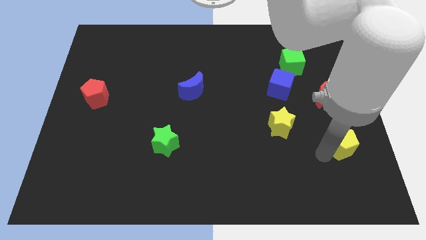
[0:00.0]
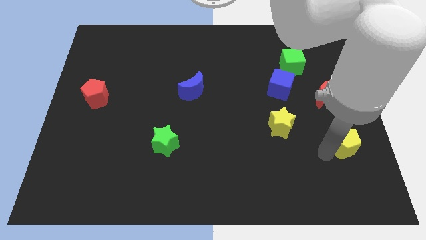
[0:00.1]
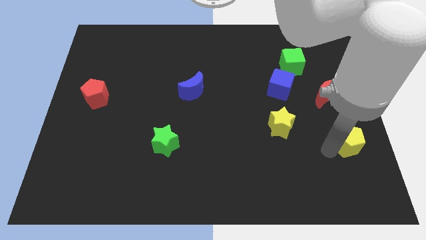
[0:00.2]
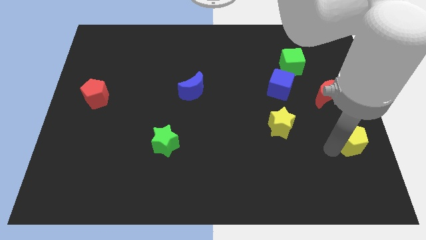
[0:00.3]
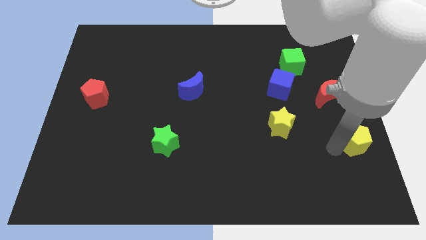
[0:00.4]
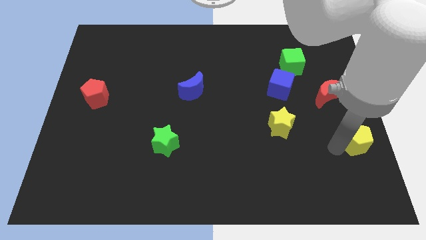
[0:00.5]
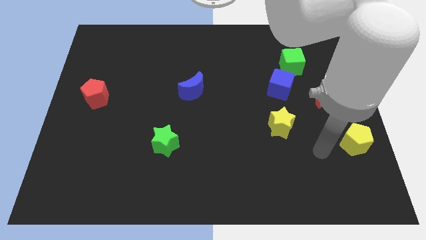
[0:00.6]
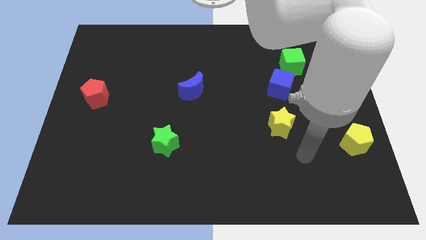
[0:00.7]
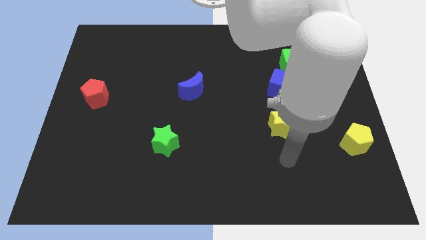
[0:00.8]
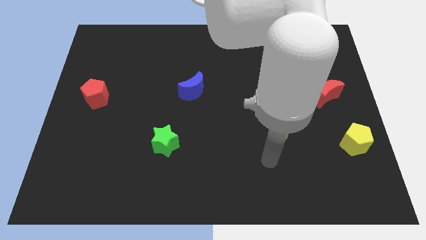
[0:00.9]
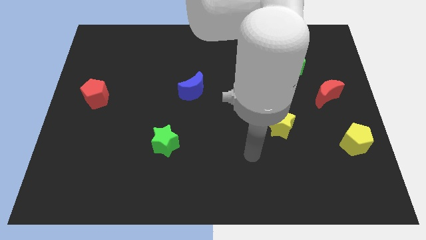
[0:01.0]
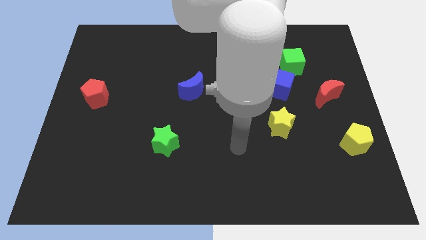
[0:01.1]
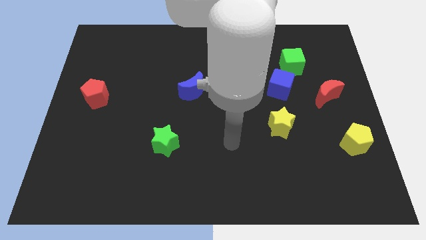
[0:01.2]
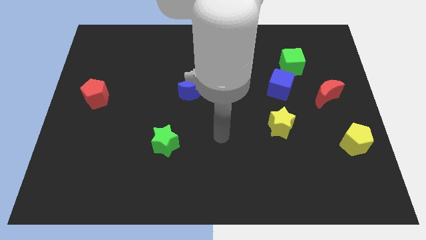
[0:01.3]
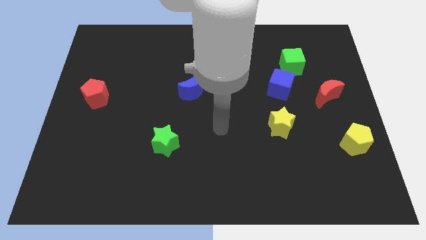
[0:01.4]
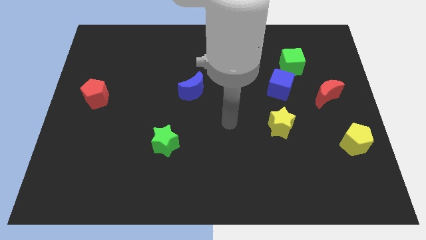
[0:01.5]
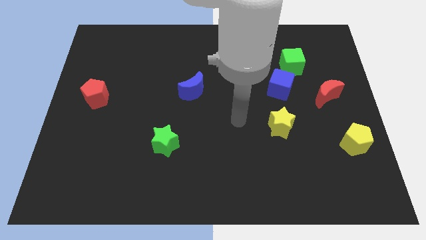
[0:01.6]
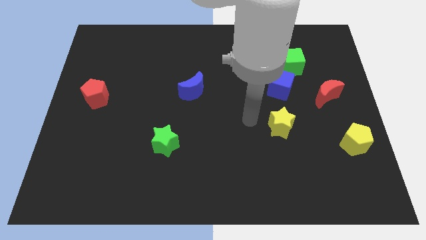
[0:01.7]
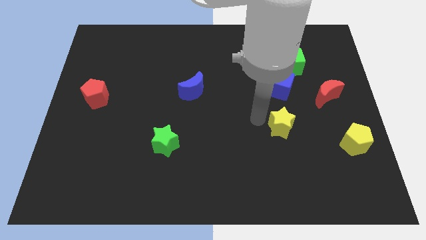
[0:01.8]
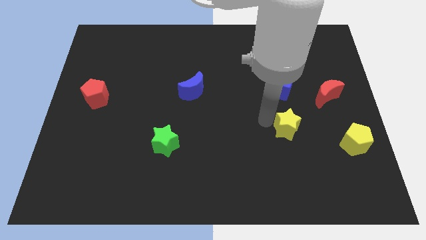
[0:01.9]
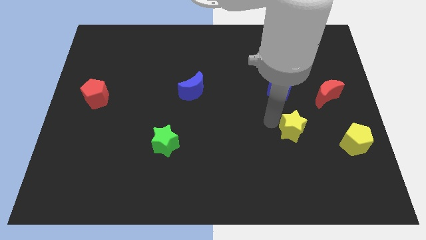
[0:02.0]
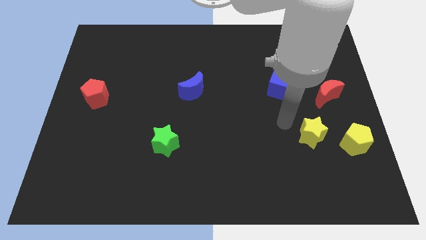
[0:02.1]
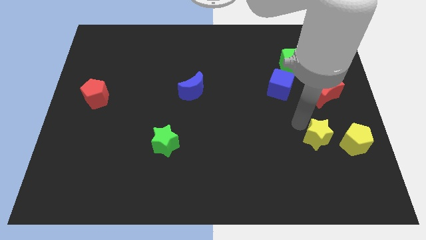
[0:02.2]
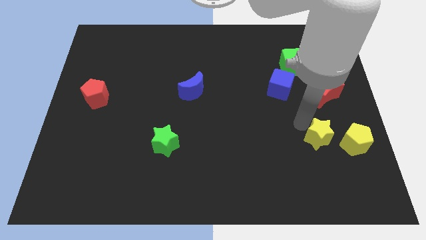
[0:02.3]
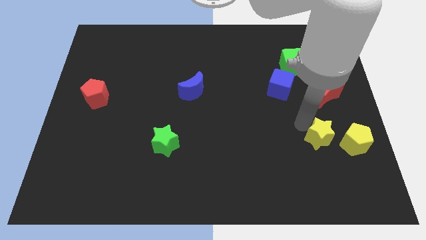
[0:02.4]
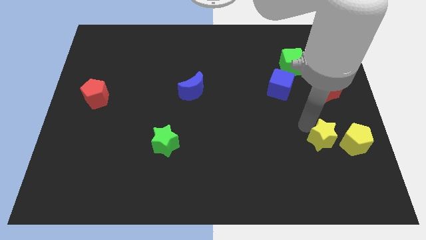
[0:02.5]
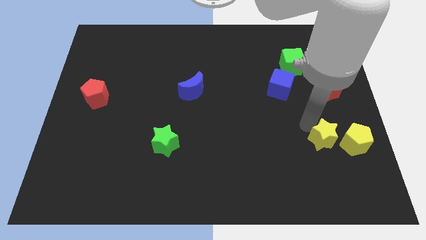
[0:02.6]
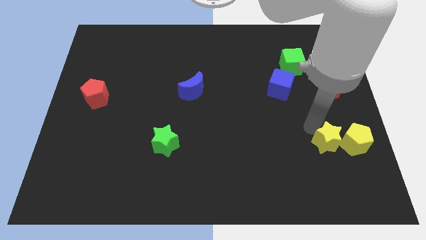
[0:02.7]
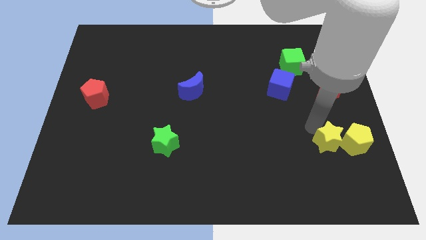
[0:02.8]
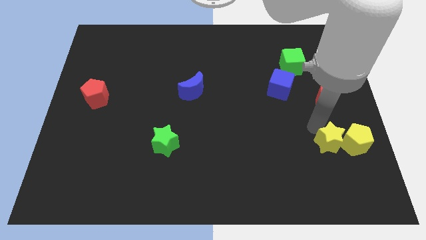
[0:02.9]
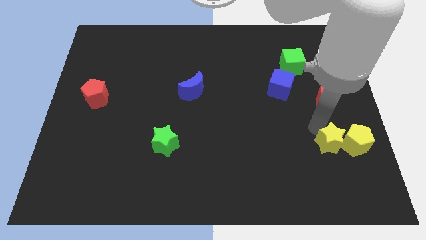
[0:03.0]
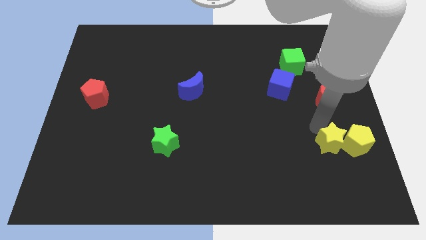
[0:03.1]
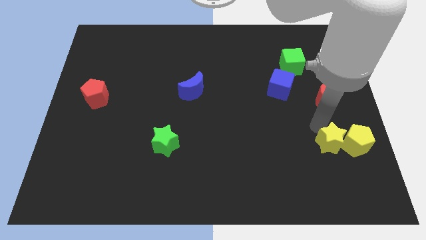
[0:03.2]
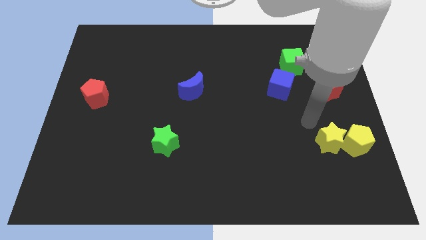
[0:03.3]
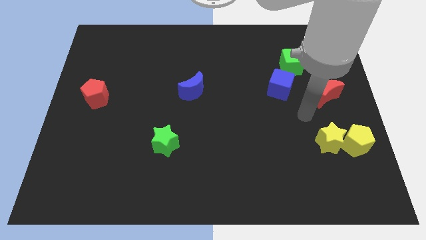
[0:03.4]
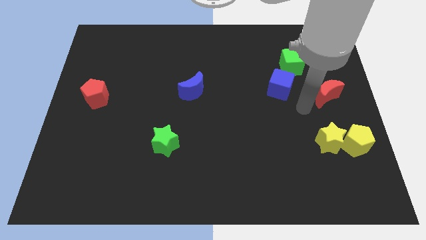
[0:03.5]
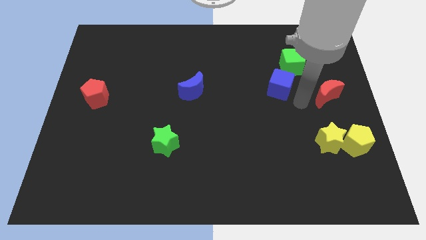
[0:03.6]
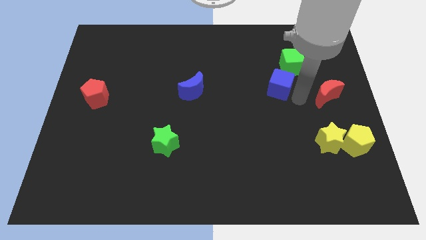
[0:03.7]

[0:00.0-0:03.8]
move the yellow blocks to the right side of the board

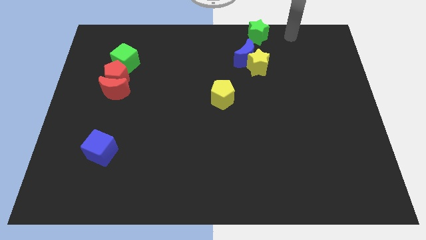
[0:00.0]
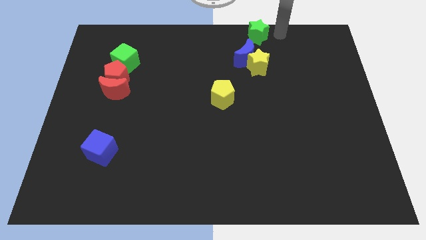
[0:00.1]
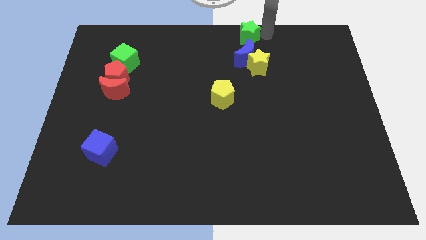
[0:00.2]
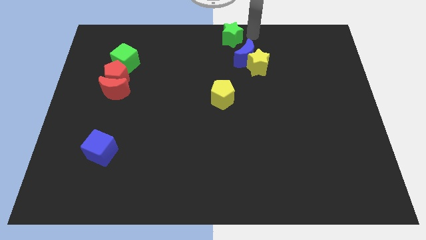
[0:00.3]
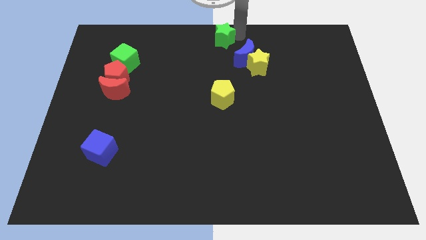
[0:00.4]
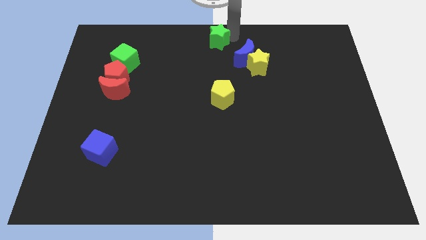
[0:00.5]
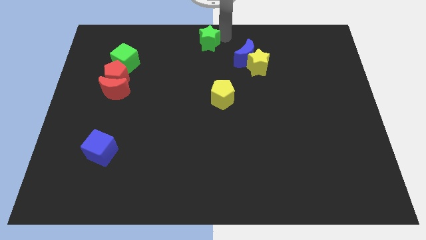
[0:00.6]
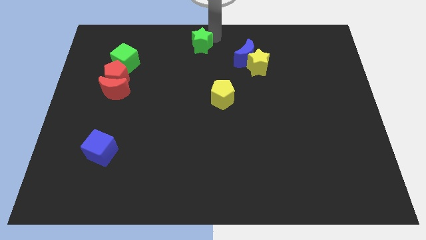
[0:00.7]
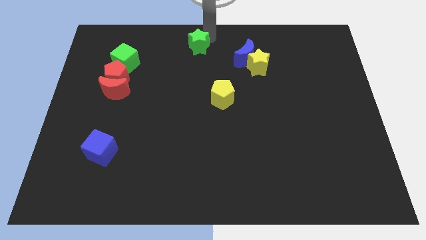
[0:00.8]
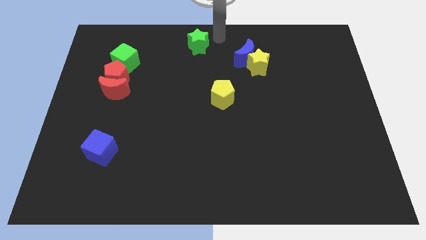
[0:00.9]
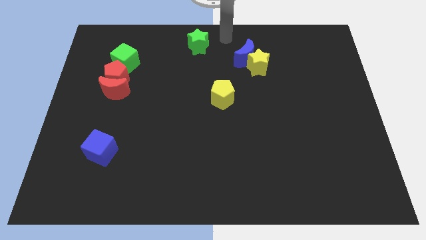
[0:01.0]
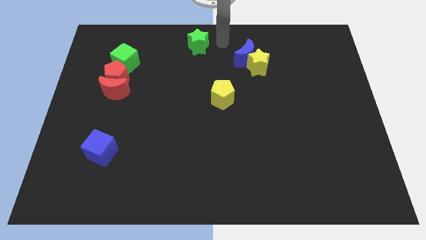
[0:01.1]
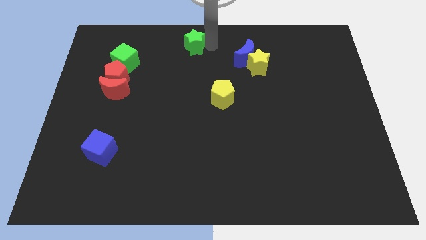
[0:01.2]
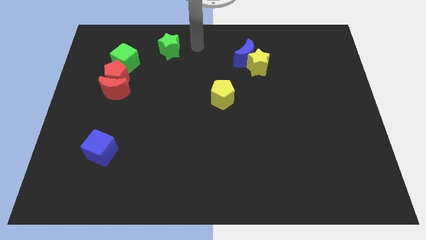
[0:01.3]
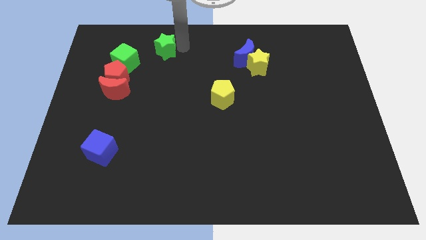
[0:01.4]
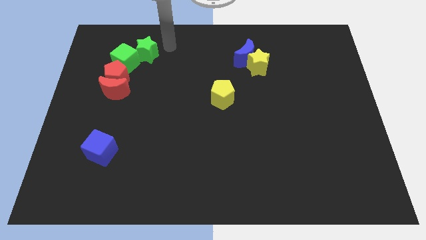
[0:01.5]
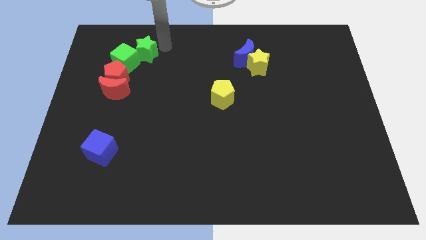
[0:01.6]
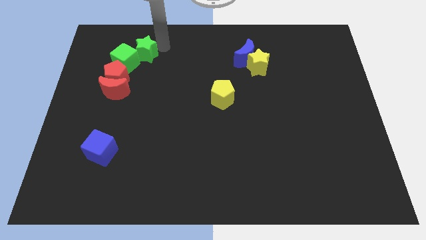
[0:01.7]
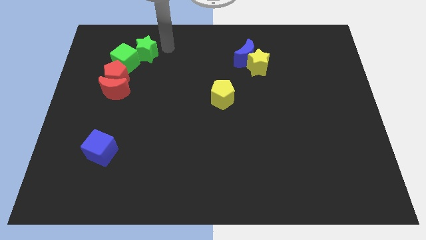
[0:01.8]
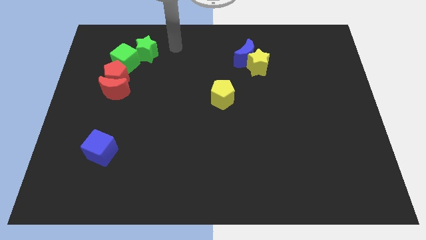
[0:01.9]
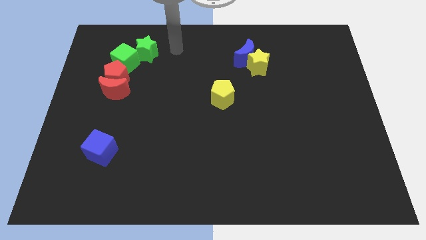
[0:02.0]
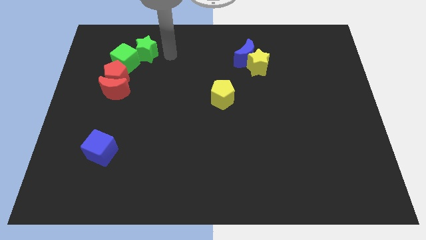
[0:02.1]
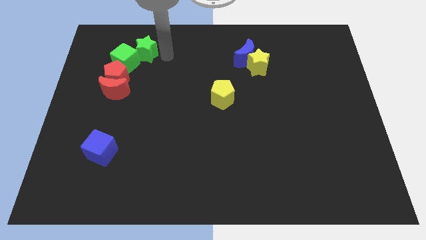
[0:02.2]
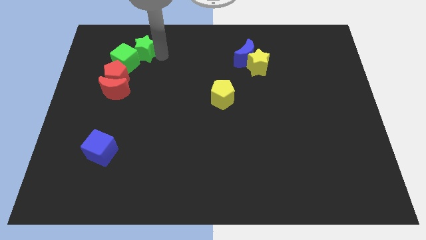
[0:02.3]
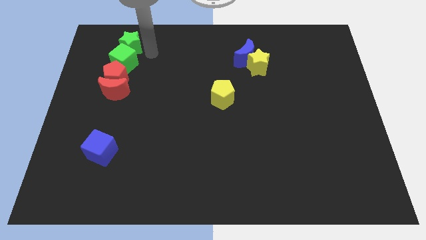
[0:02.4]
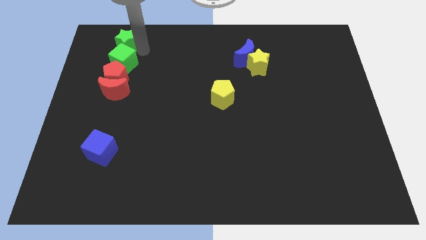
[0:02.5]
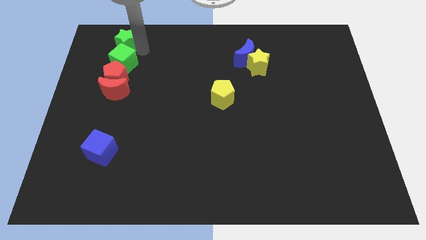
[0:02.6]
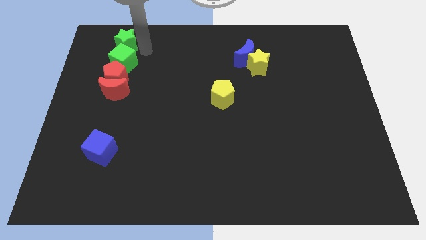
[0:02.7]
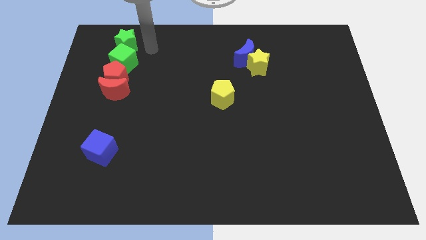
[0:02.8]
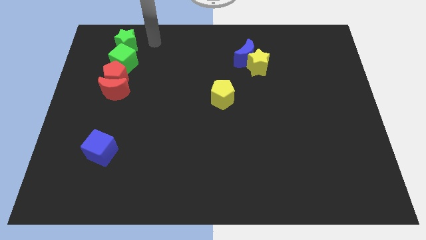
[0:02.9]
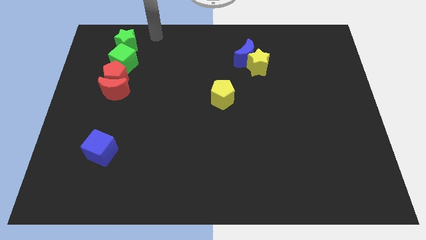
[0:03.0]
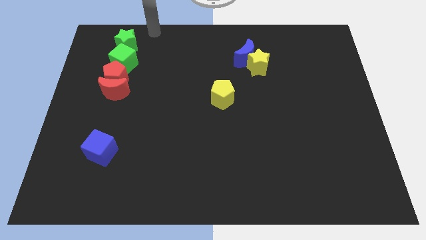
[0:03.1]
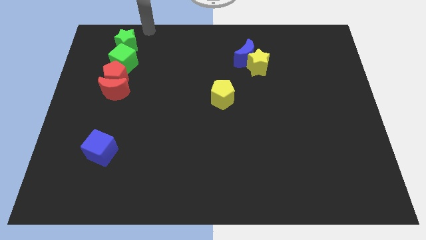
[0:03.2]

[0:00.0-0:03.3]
place the green star above the green cube

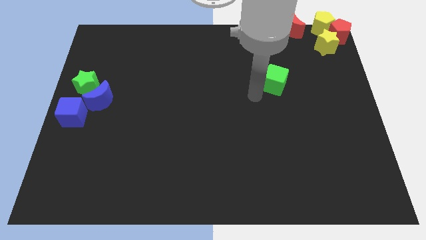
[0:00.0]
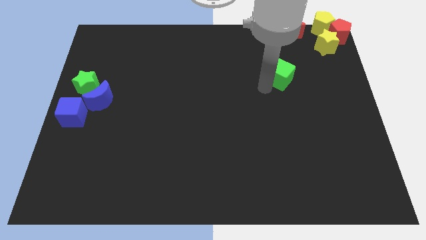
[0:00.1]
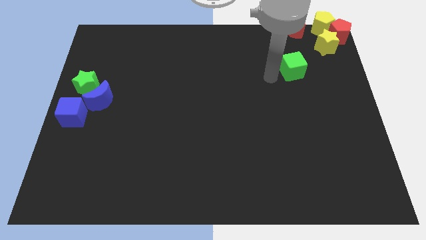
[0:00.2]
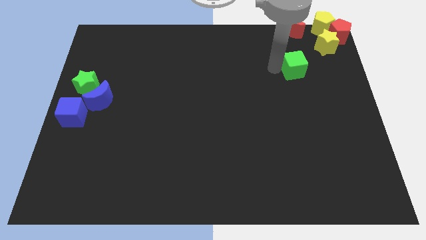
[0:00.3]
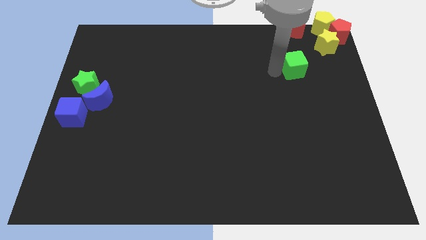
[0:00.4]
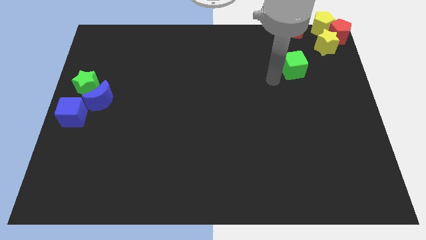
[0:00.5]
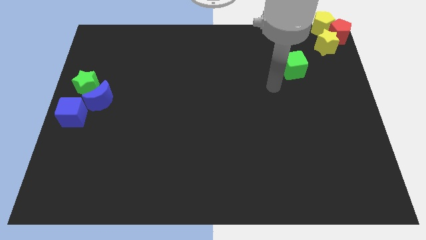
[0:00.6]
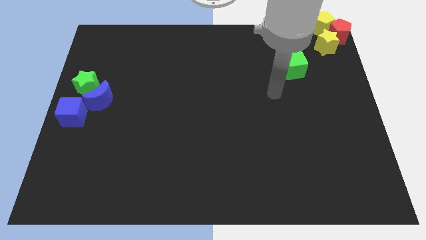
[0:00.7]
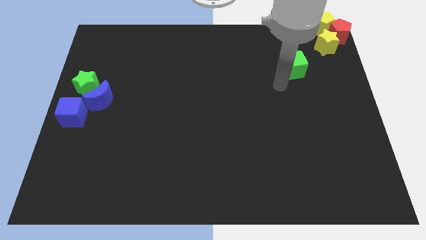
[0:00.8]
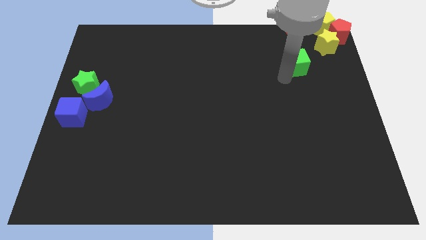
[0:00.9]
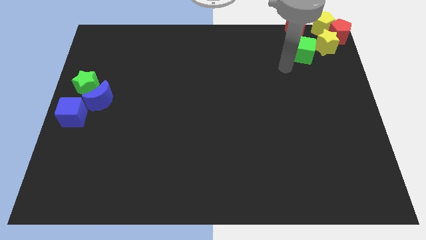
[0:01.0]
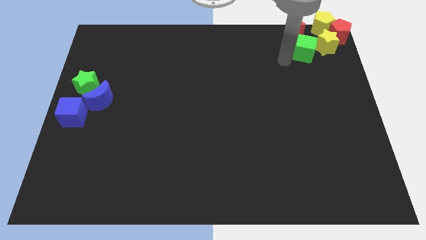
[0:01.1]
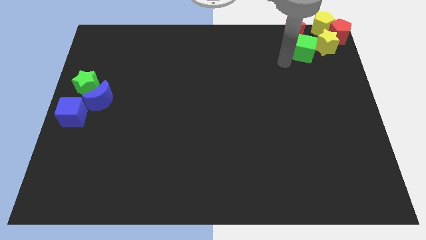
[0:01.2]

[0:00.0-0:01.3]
place the green cube to the left of the yellow star

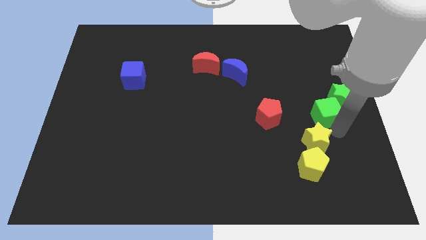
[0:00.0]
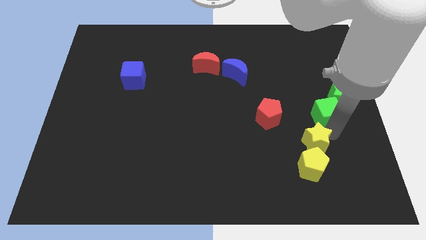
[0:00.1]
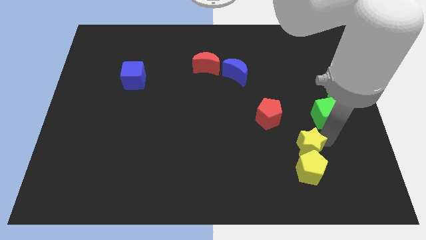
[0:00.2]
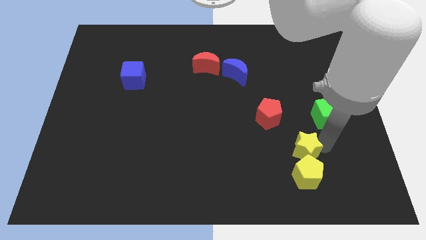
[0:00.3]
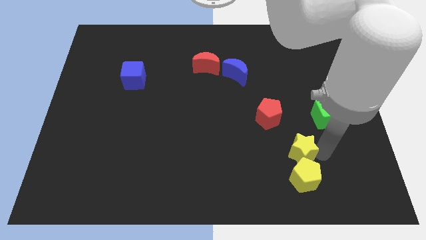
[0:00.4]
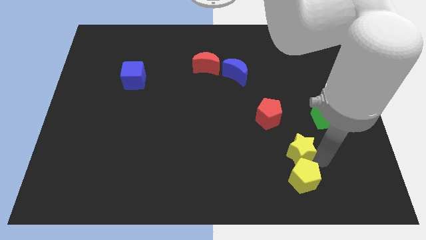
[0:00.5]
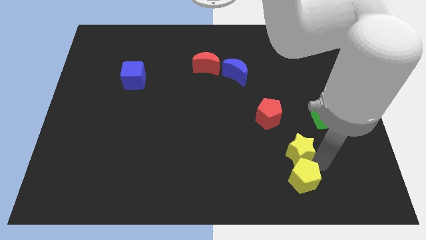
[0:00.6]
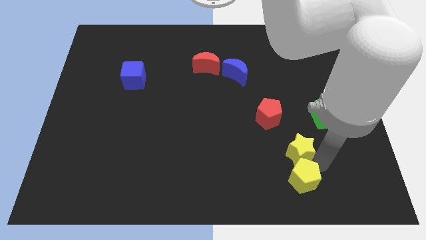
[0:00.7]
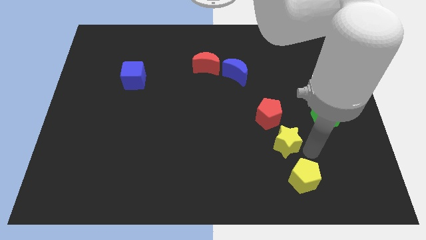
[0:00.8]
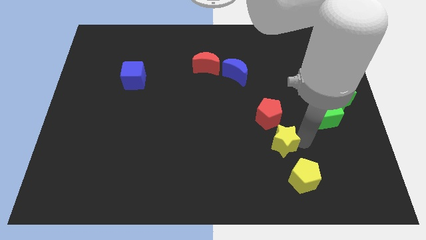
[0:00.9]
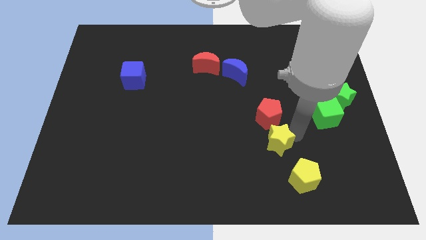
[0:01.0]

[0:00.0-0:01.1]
place the yellow star below the red pentagon
